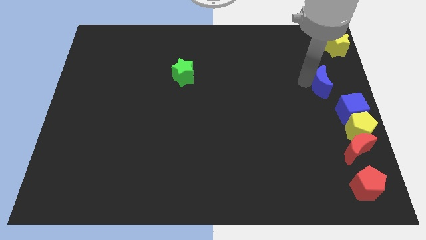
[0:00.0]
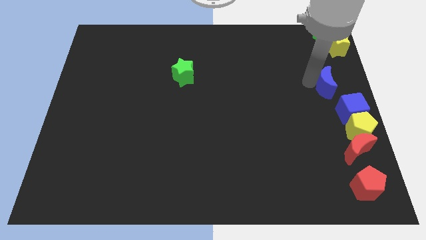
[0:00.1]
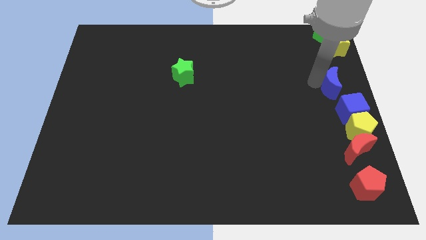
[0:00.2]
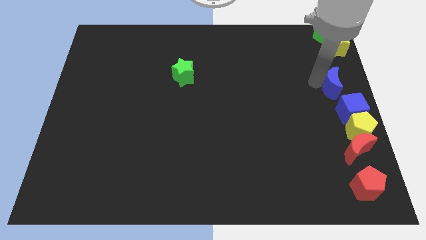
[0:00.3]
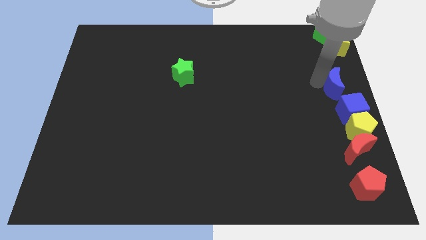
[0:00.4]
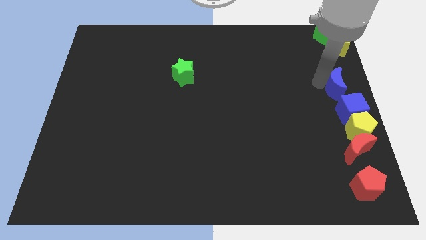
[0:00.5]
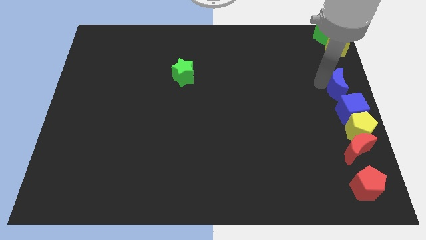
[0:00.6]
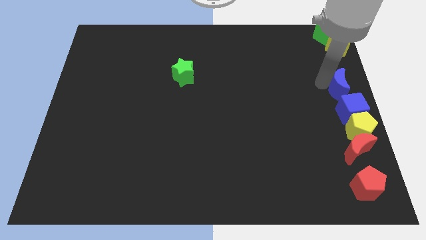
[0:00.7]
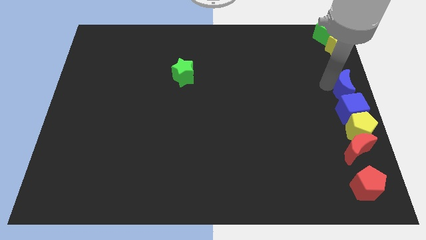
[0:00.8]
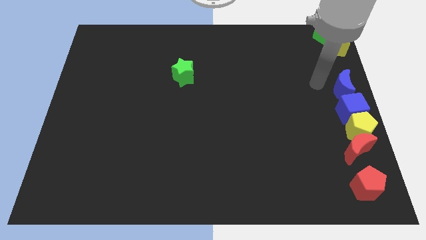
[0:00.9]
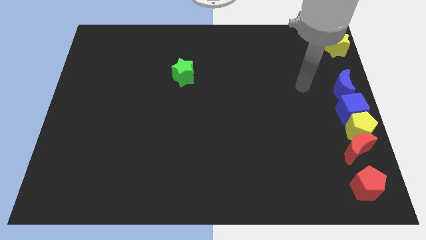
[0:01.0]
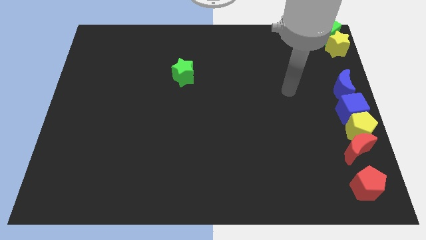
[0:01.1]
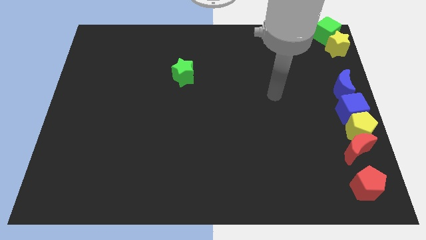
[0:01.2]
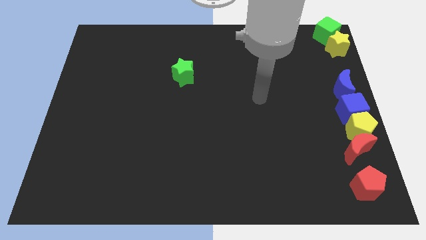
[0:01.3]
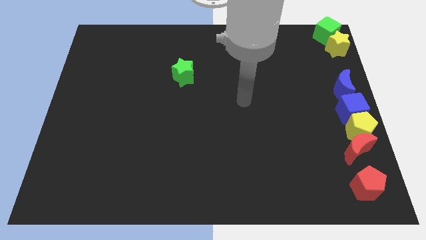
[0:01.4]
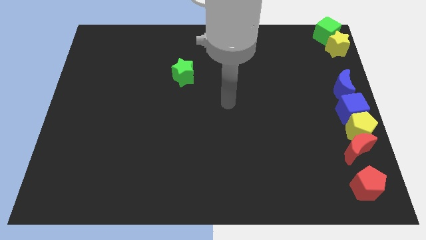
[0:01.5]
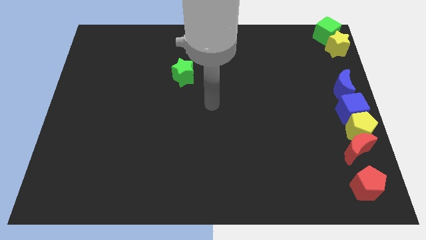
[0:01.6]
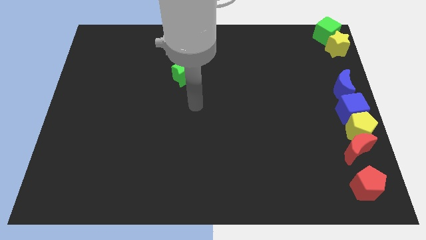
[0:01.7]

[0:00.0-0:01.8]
place the blue moon above the blue cube

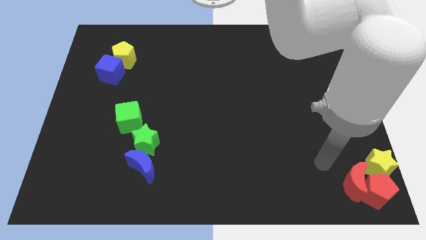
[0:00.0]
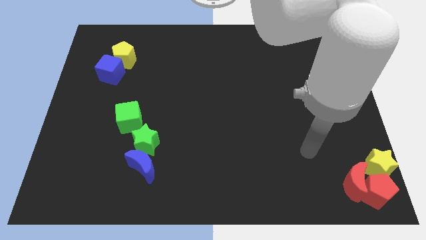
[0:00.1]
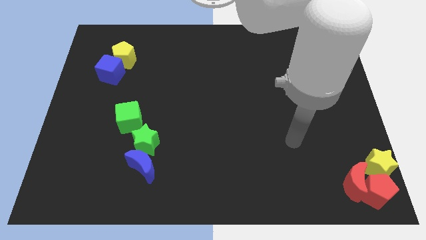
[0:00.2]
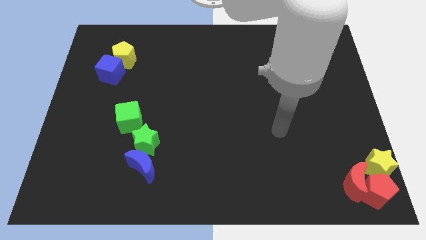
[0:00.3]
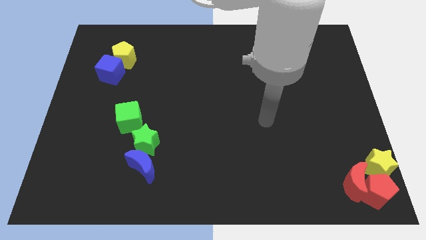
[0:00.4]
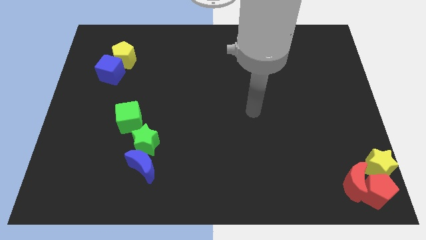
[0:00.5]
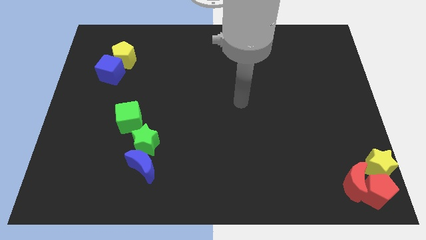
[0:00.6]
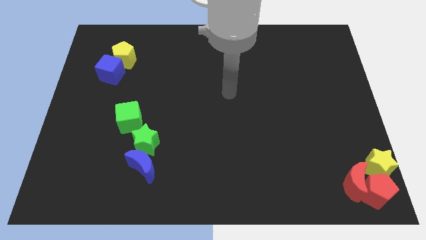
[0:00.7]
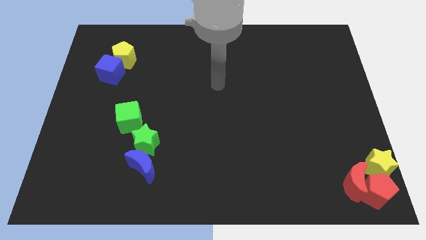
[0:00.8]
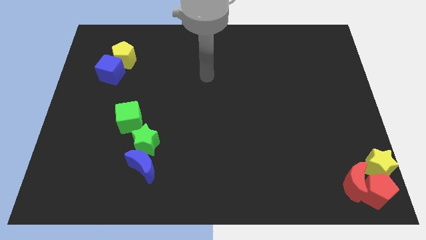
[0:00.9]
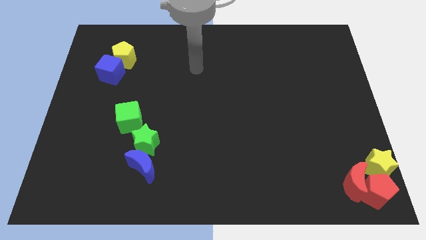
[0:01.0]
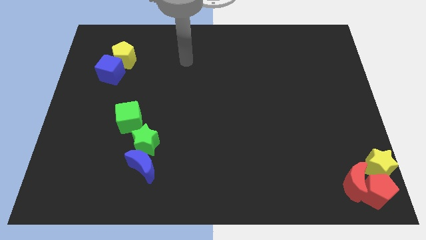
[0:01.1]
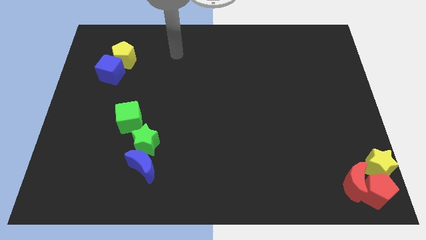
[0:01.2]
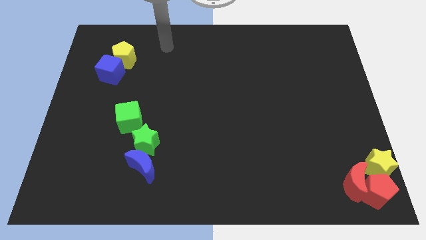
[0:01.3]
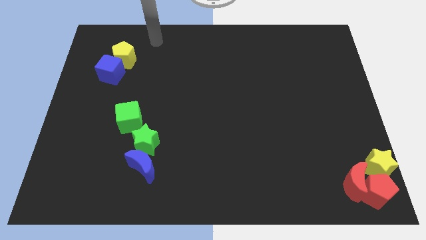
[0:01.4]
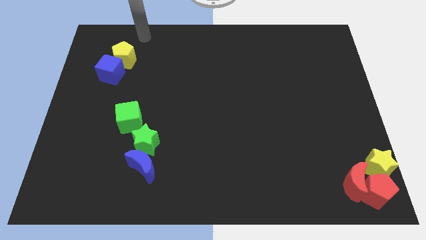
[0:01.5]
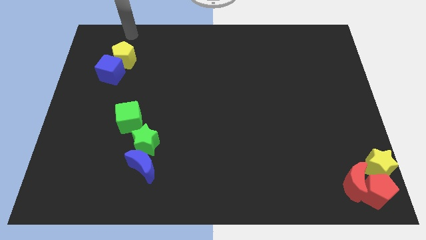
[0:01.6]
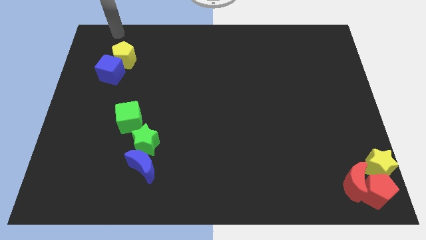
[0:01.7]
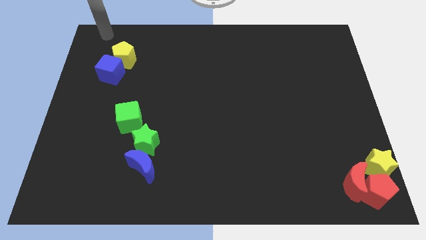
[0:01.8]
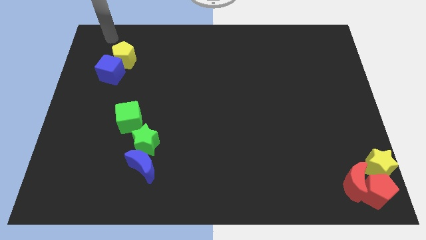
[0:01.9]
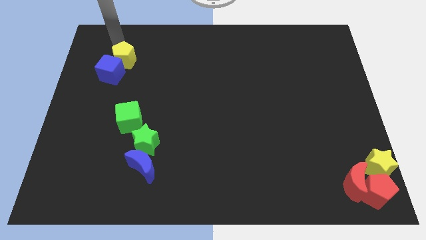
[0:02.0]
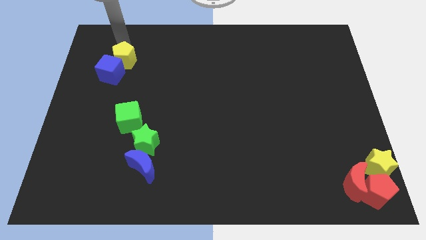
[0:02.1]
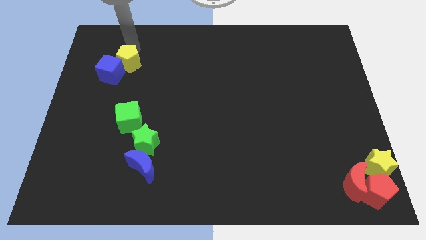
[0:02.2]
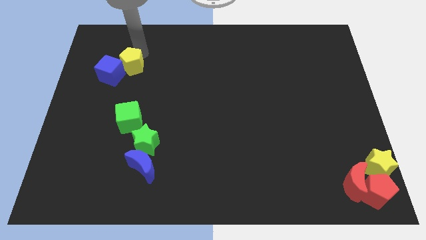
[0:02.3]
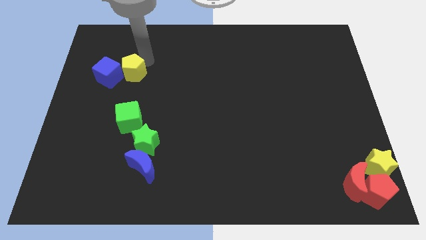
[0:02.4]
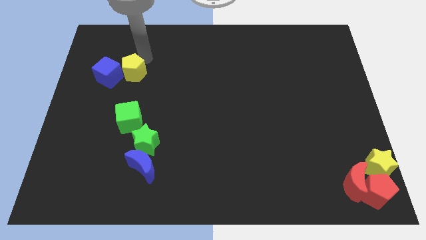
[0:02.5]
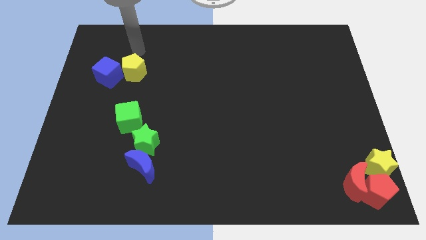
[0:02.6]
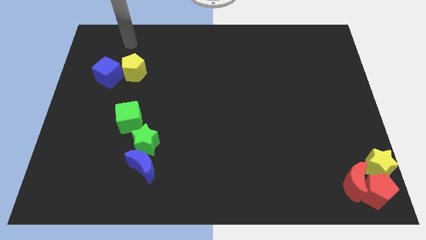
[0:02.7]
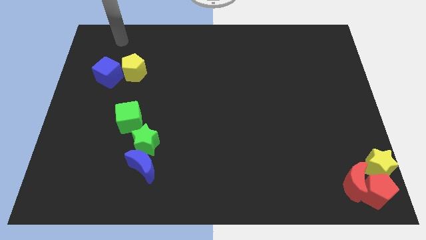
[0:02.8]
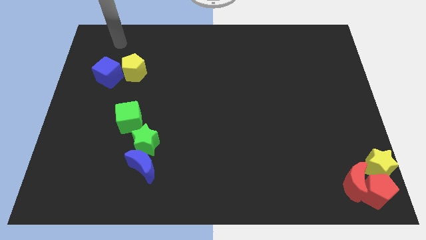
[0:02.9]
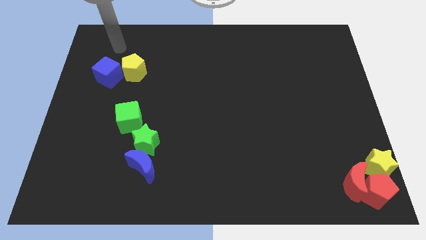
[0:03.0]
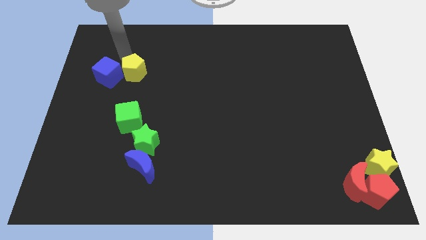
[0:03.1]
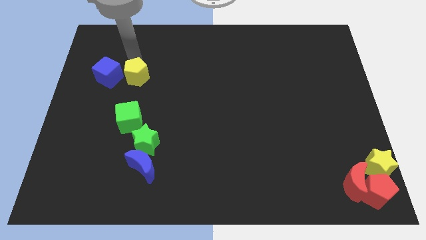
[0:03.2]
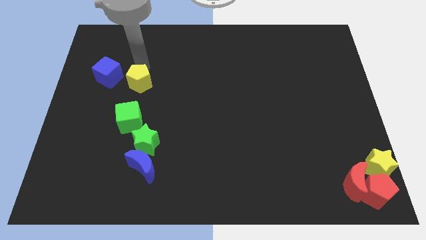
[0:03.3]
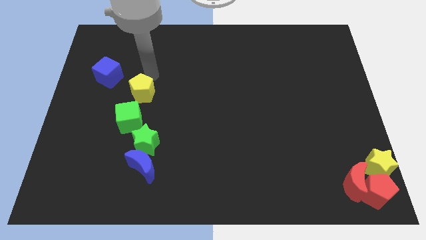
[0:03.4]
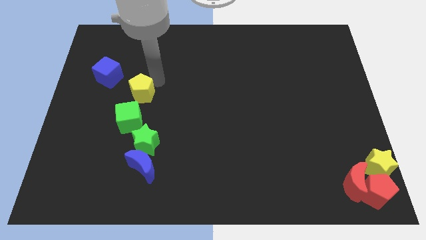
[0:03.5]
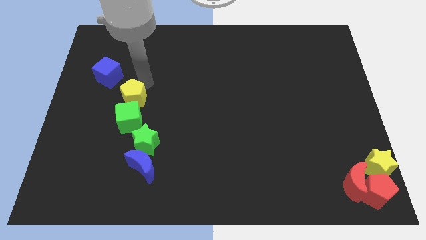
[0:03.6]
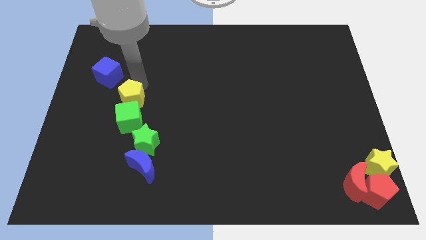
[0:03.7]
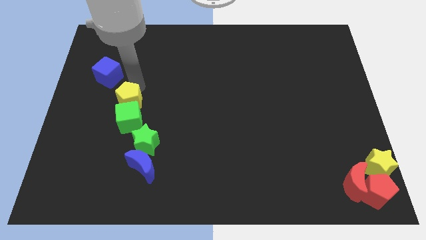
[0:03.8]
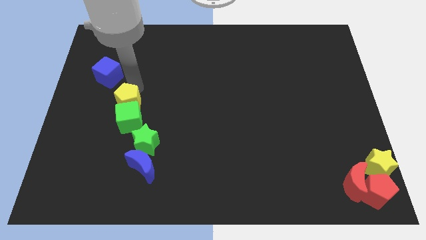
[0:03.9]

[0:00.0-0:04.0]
move the yellow pentagon to the top side of the green cube

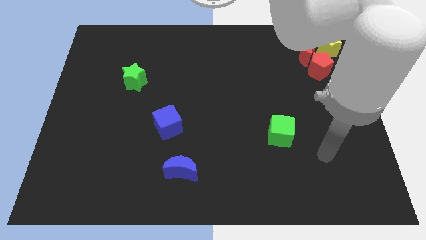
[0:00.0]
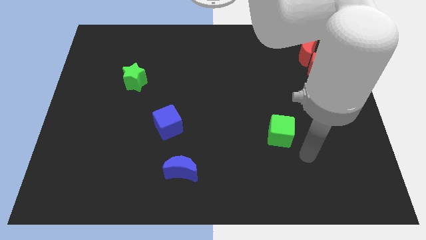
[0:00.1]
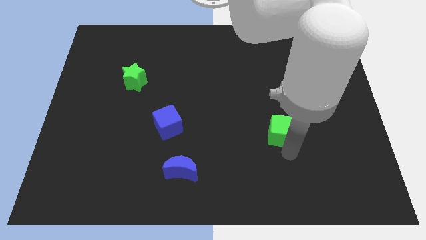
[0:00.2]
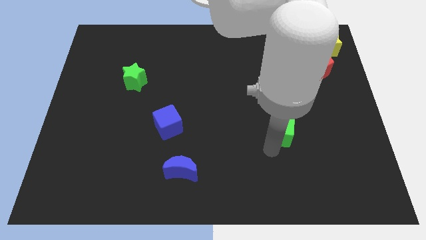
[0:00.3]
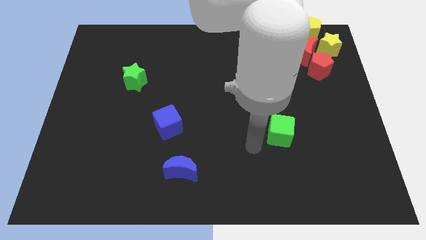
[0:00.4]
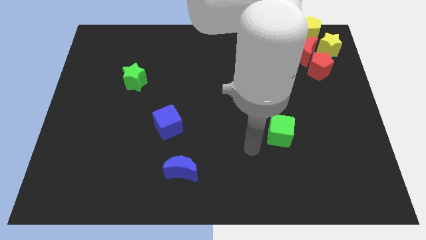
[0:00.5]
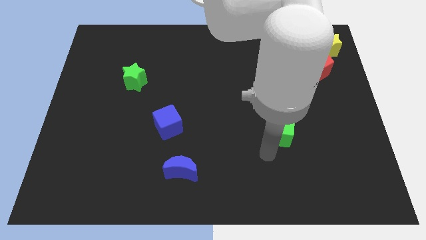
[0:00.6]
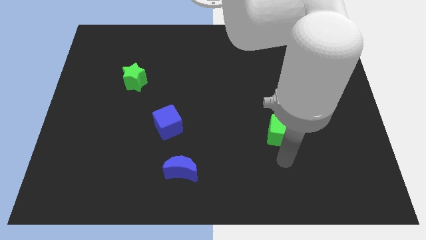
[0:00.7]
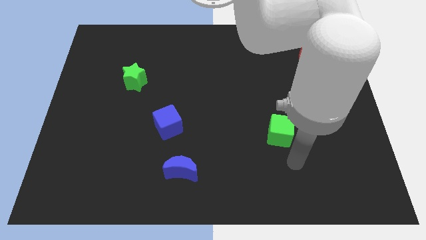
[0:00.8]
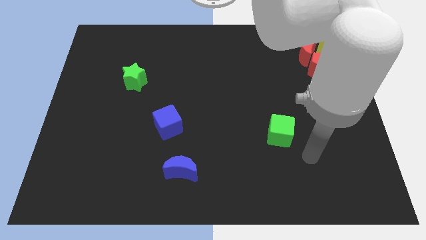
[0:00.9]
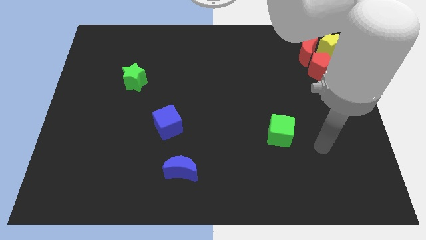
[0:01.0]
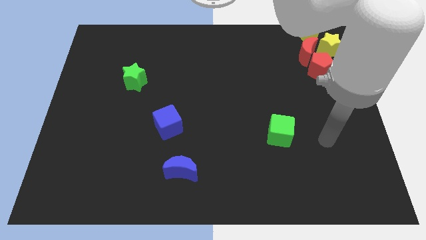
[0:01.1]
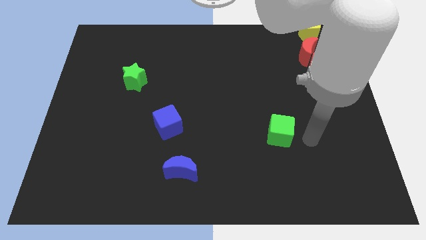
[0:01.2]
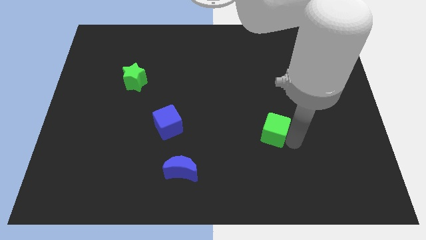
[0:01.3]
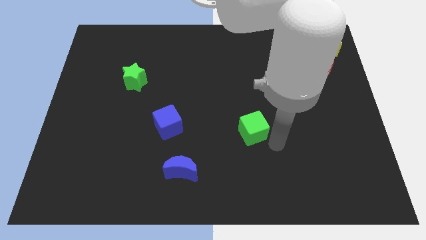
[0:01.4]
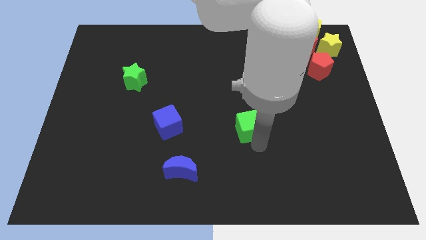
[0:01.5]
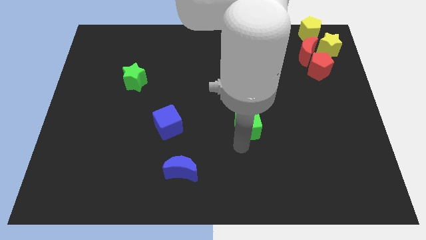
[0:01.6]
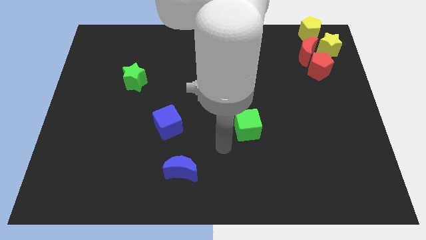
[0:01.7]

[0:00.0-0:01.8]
put the green cube to the right of the blue cube

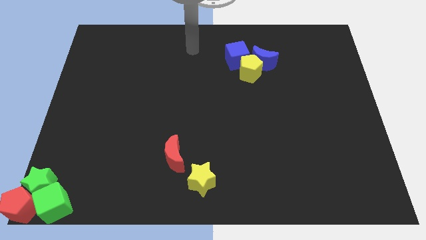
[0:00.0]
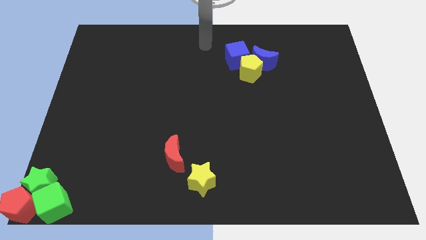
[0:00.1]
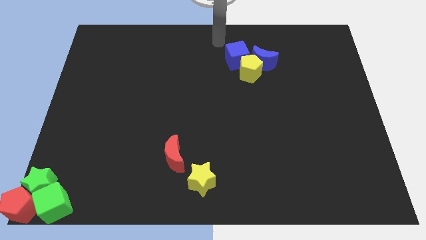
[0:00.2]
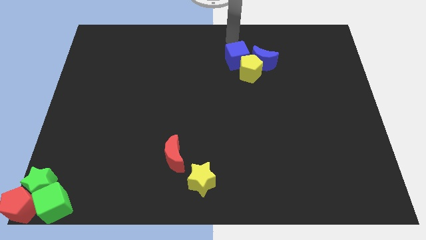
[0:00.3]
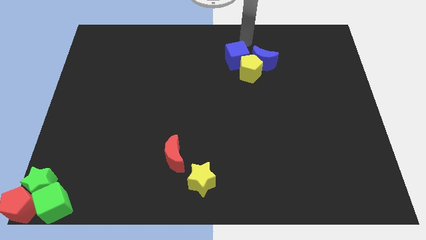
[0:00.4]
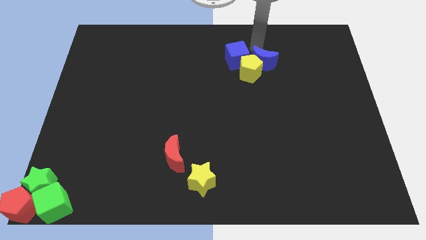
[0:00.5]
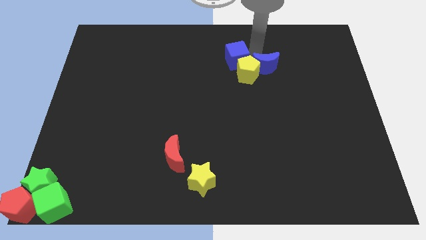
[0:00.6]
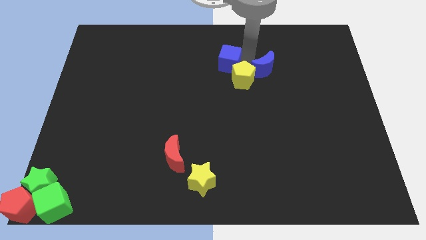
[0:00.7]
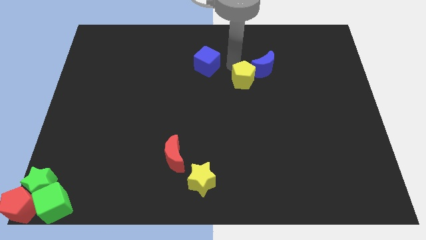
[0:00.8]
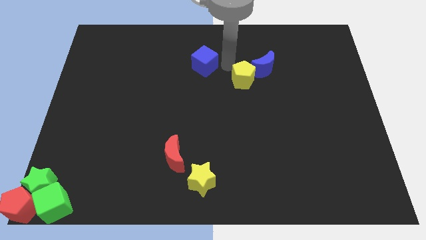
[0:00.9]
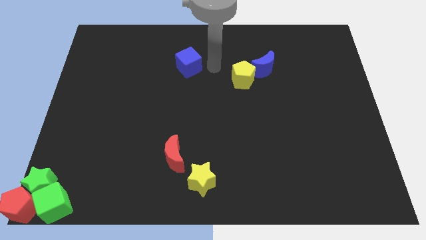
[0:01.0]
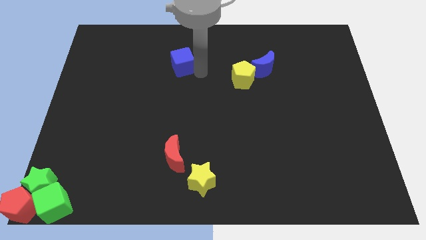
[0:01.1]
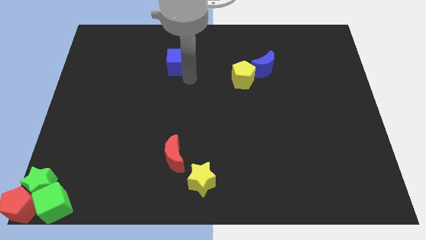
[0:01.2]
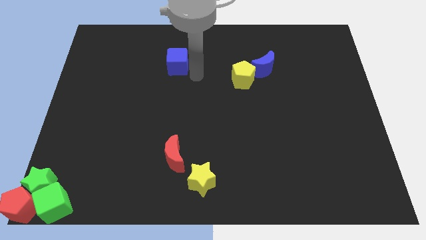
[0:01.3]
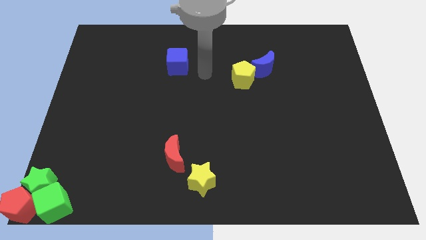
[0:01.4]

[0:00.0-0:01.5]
move the blue cube to the top of the red crescent
